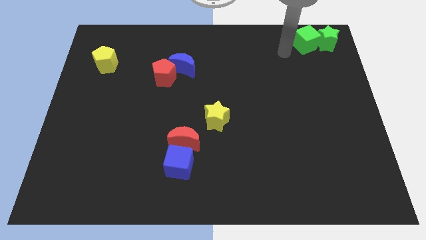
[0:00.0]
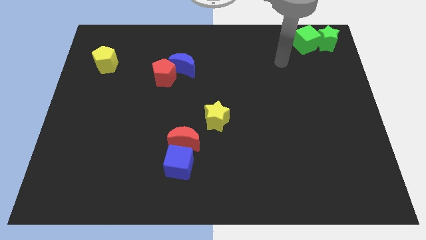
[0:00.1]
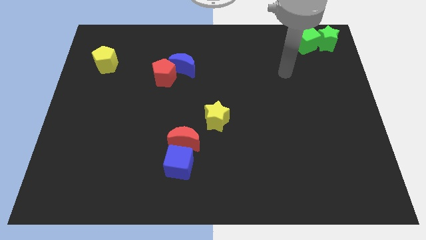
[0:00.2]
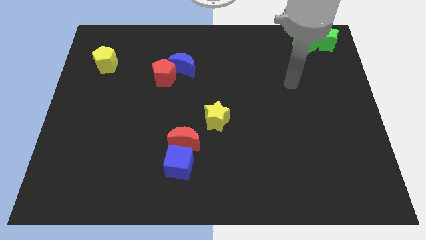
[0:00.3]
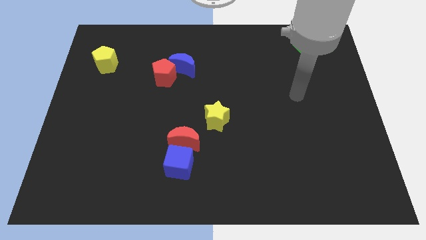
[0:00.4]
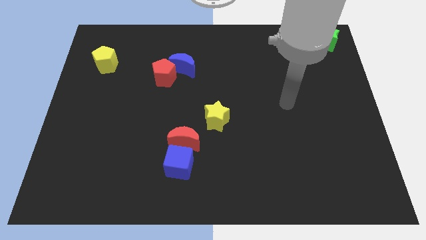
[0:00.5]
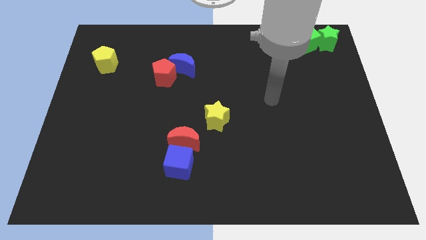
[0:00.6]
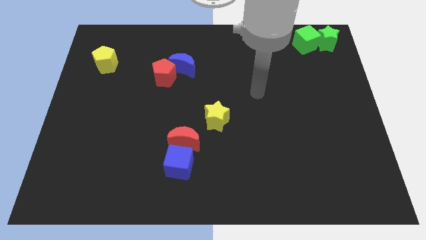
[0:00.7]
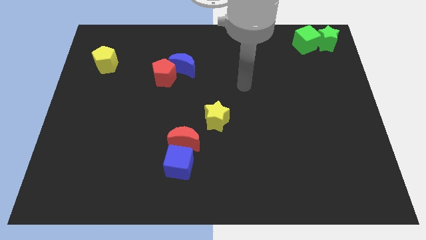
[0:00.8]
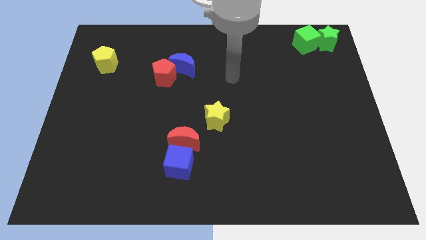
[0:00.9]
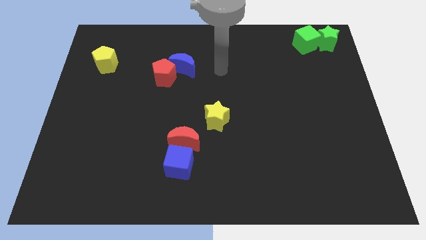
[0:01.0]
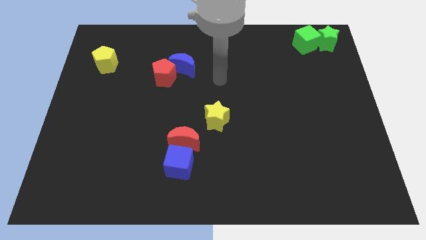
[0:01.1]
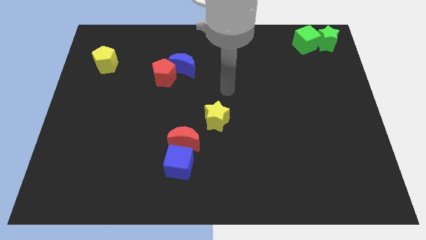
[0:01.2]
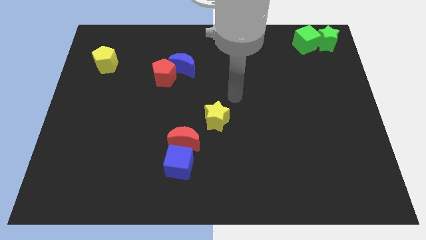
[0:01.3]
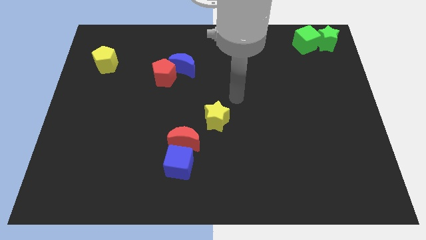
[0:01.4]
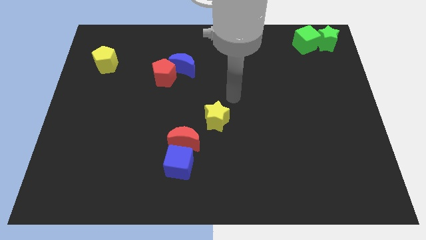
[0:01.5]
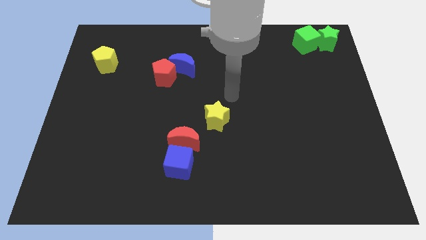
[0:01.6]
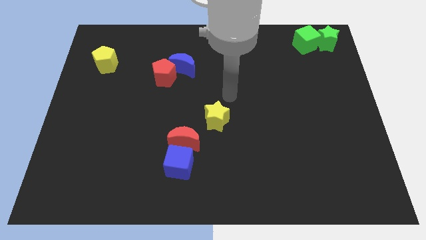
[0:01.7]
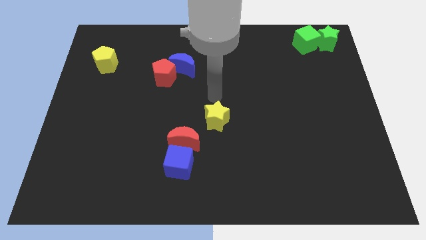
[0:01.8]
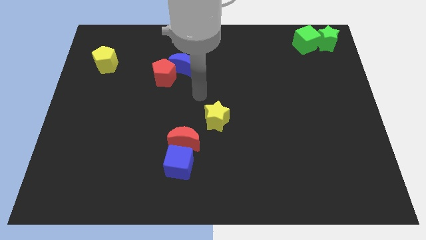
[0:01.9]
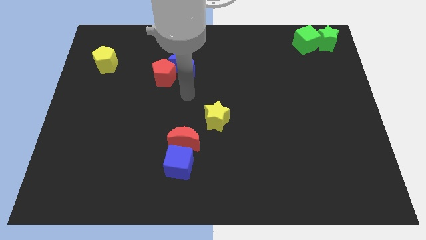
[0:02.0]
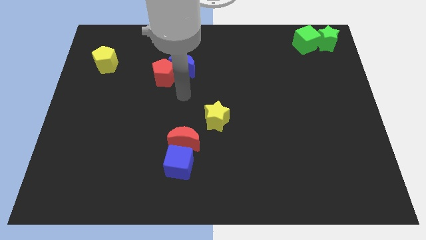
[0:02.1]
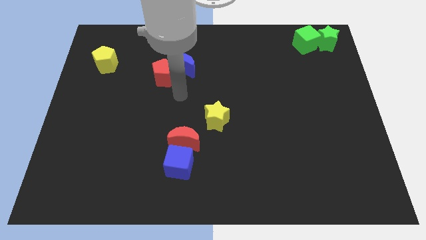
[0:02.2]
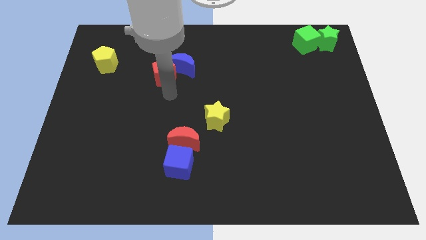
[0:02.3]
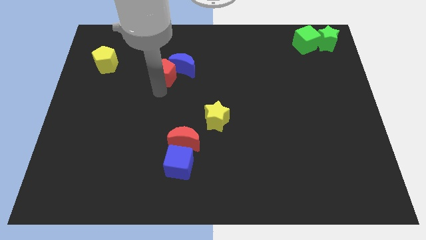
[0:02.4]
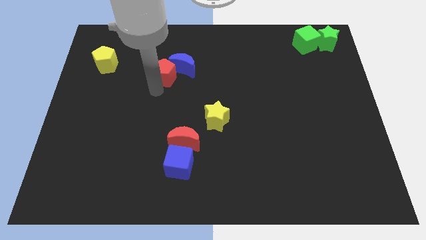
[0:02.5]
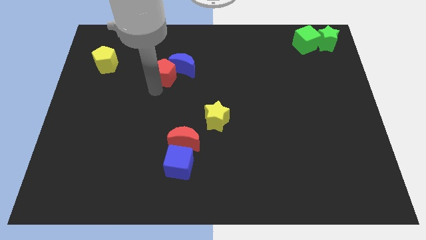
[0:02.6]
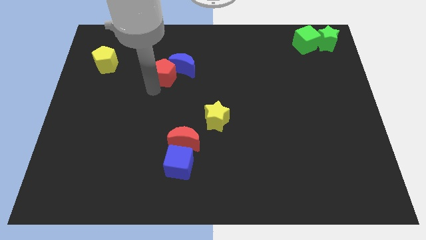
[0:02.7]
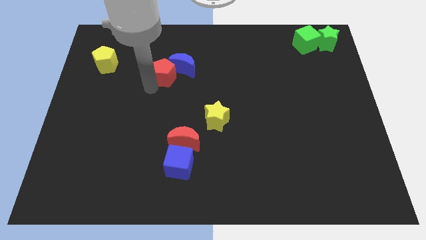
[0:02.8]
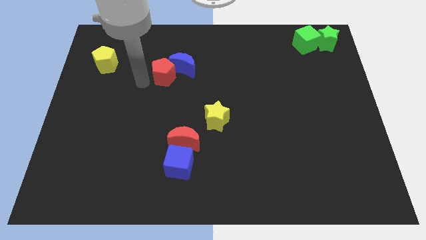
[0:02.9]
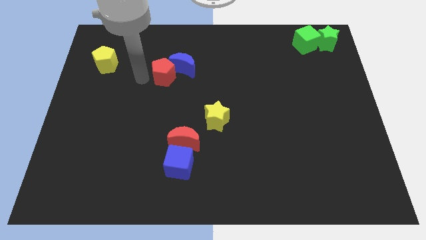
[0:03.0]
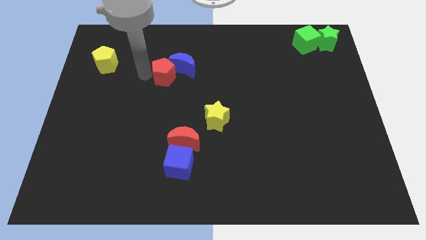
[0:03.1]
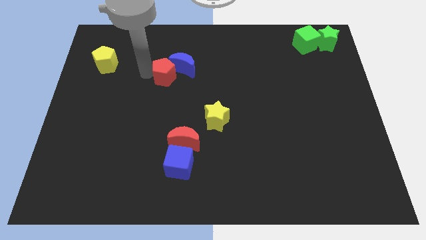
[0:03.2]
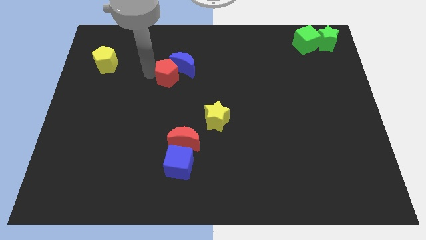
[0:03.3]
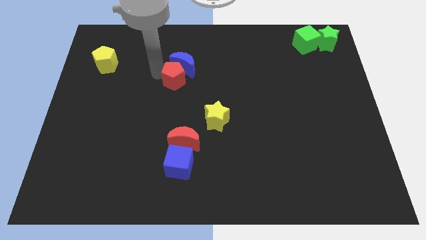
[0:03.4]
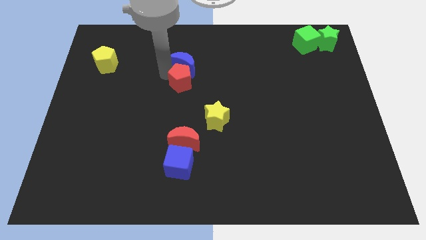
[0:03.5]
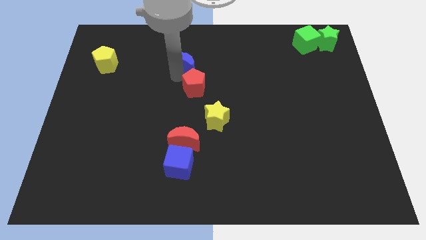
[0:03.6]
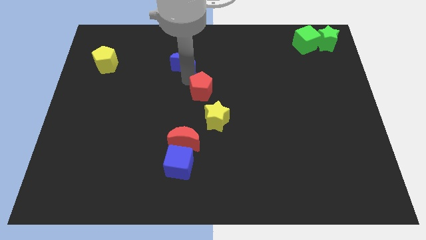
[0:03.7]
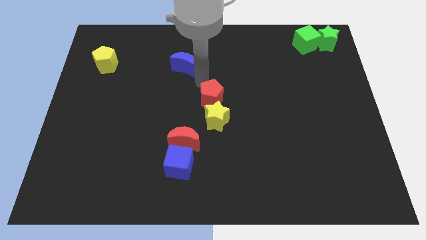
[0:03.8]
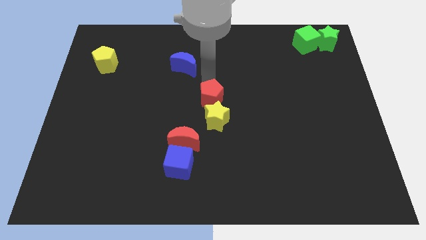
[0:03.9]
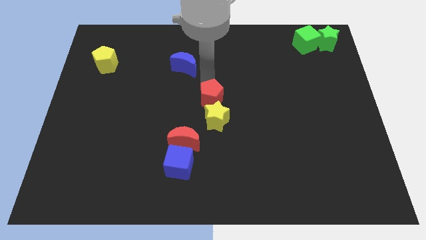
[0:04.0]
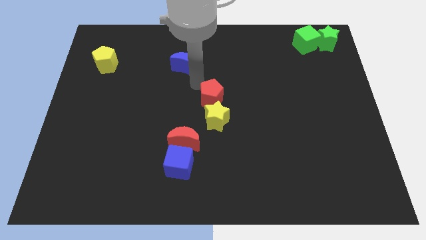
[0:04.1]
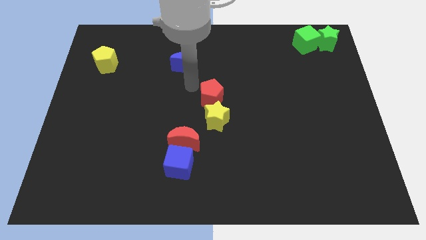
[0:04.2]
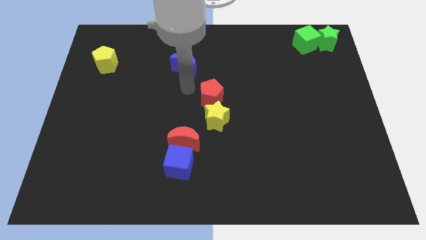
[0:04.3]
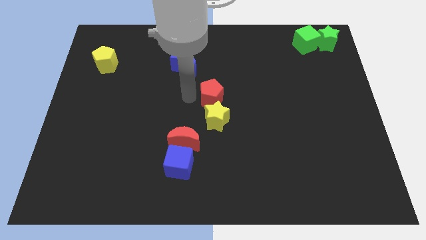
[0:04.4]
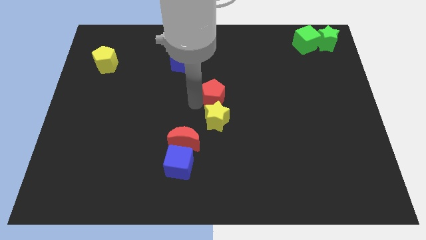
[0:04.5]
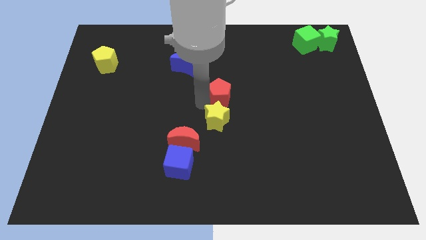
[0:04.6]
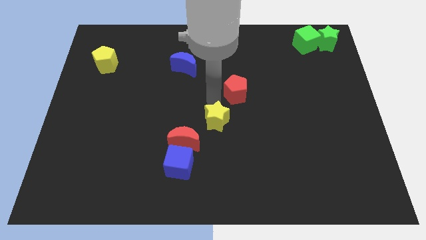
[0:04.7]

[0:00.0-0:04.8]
place the red pentagon to the top of the yellow star

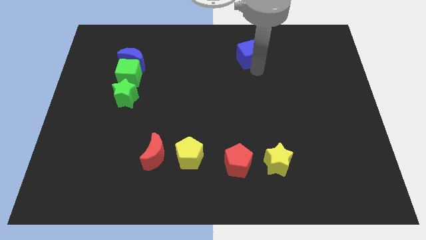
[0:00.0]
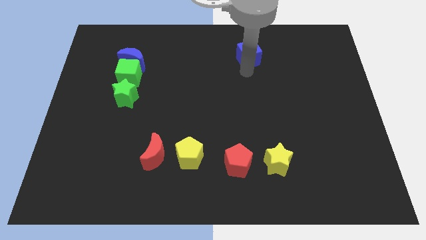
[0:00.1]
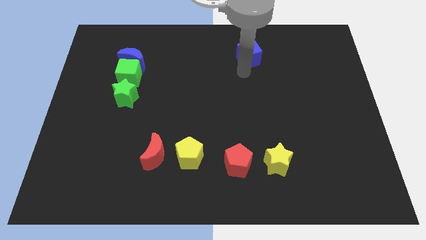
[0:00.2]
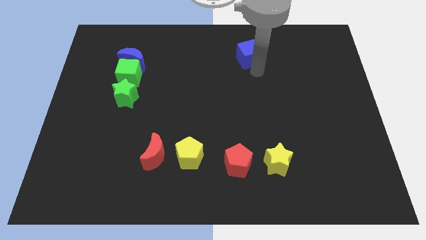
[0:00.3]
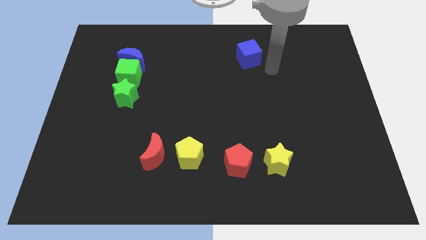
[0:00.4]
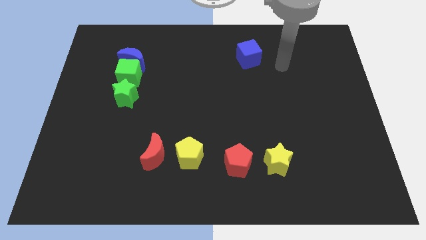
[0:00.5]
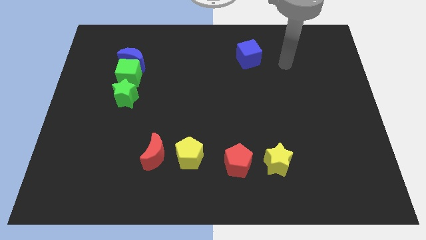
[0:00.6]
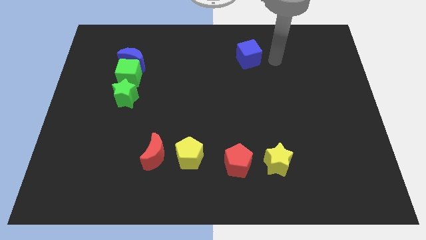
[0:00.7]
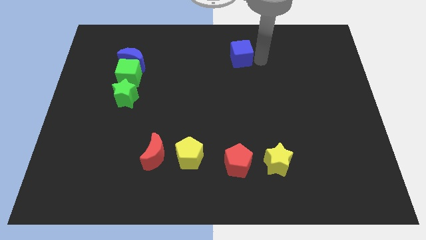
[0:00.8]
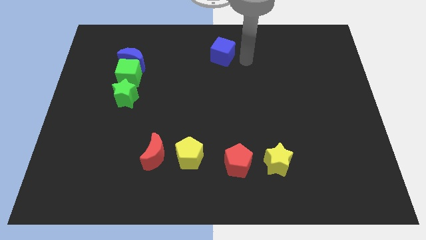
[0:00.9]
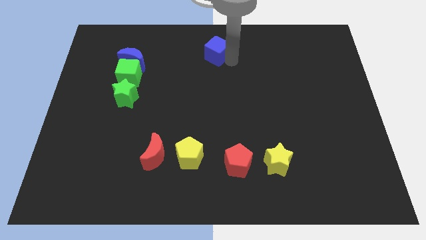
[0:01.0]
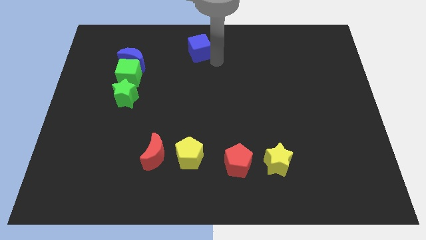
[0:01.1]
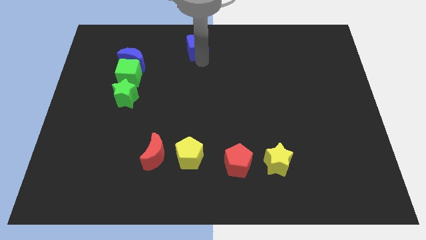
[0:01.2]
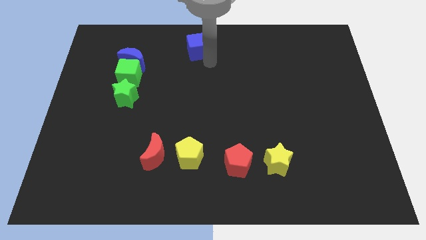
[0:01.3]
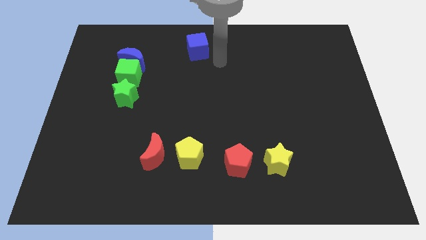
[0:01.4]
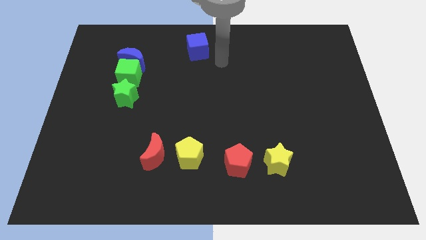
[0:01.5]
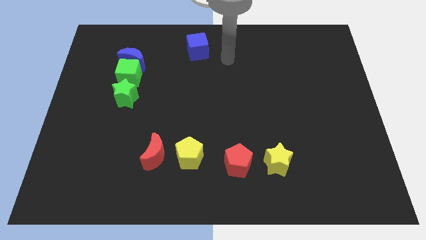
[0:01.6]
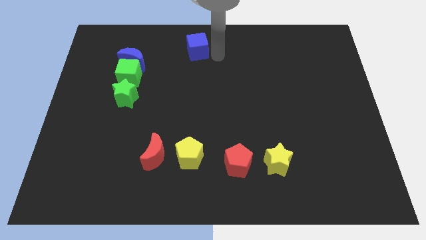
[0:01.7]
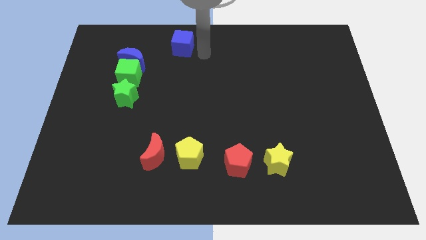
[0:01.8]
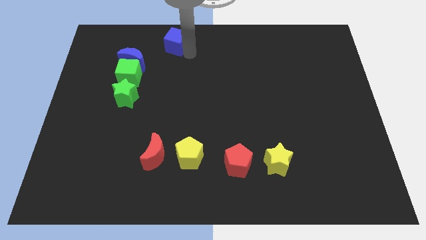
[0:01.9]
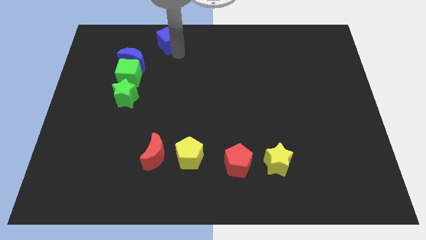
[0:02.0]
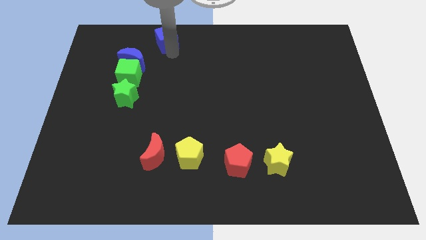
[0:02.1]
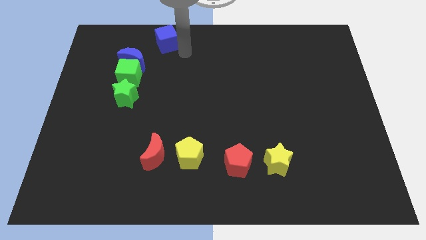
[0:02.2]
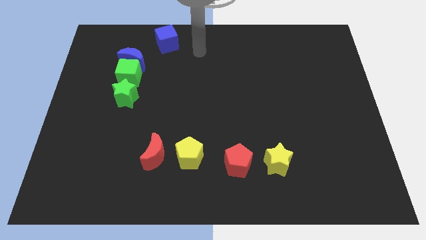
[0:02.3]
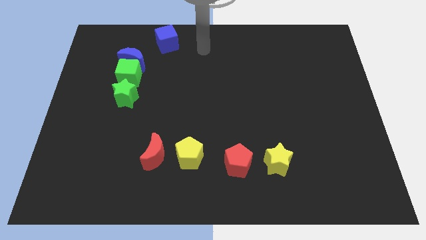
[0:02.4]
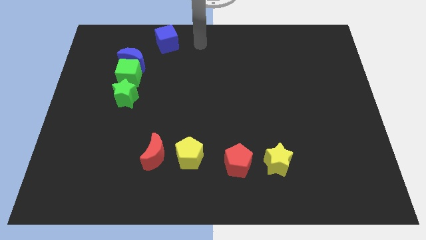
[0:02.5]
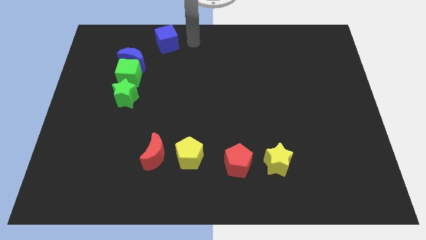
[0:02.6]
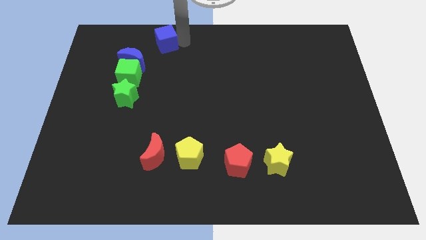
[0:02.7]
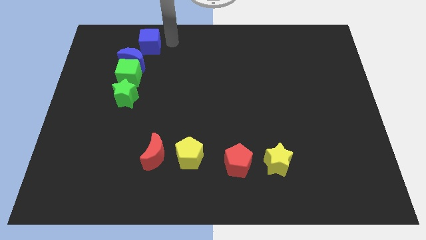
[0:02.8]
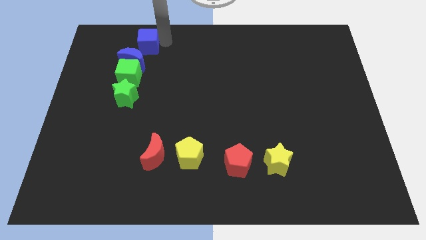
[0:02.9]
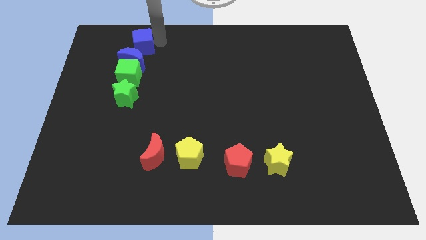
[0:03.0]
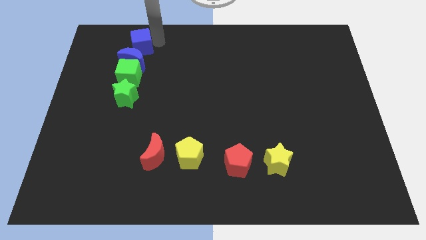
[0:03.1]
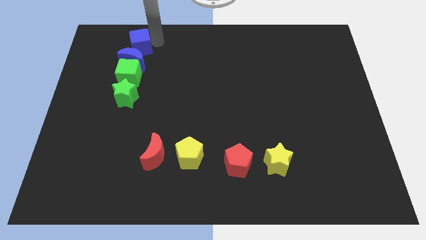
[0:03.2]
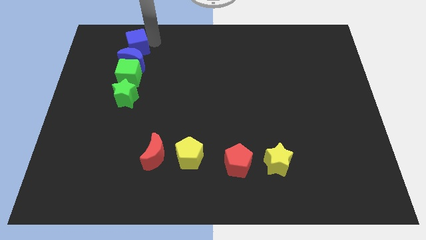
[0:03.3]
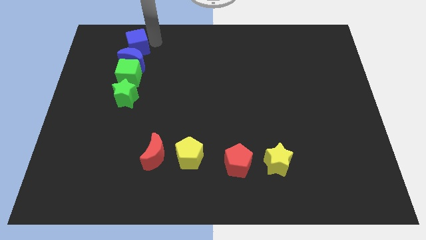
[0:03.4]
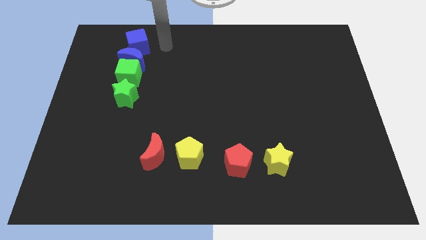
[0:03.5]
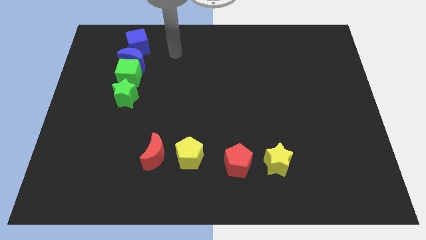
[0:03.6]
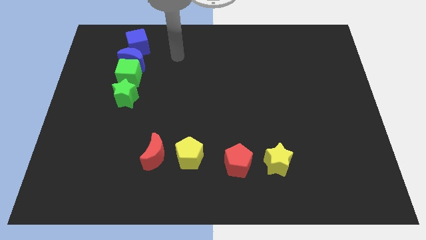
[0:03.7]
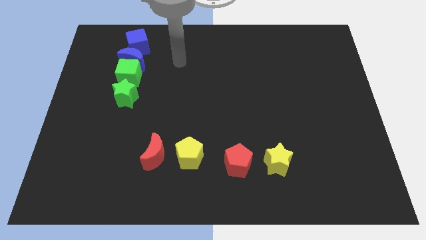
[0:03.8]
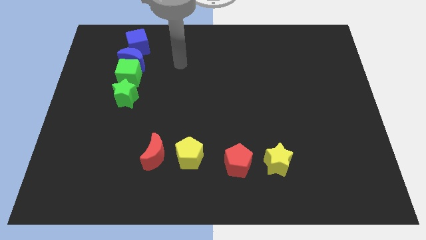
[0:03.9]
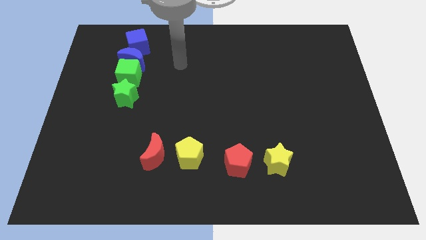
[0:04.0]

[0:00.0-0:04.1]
put the blue cube above the blue moon
